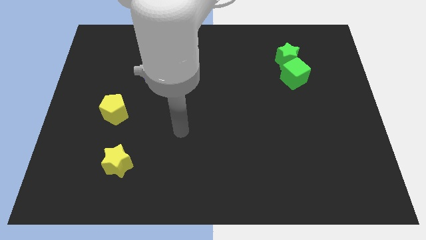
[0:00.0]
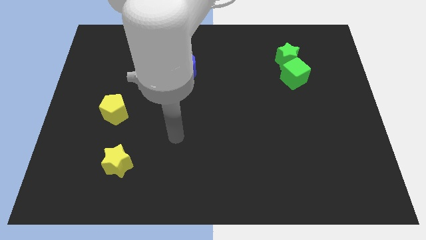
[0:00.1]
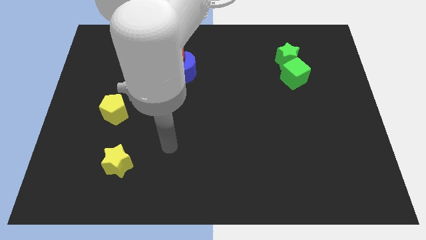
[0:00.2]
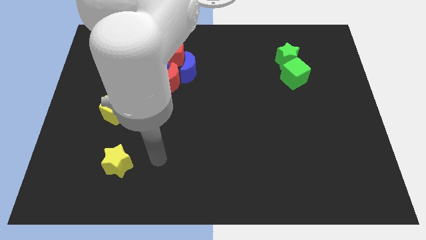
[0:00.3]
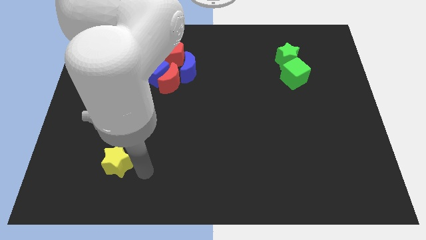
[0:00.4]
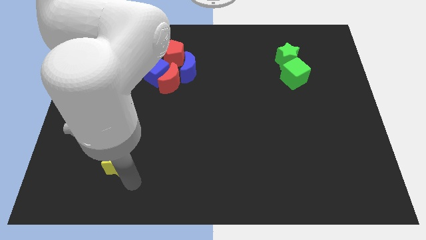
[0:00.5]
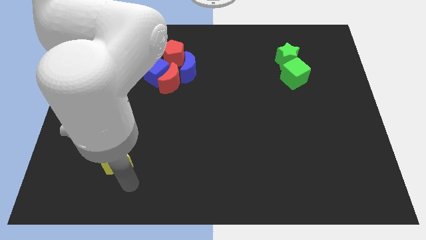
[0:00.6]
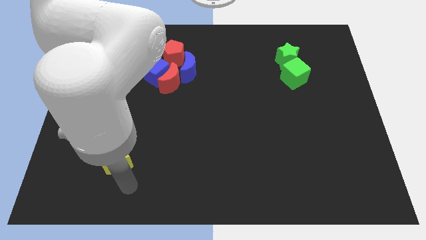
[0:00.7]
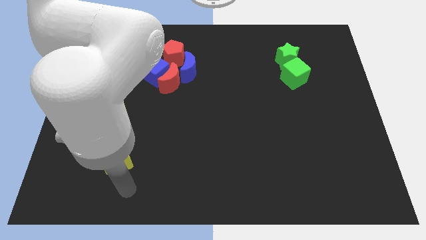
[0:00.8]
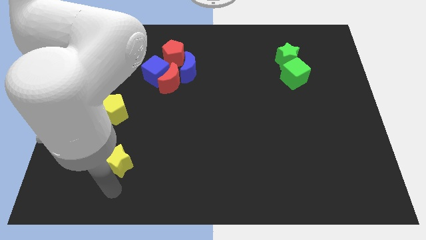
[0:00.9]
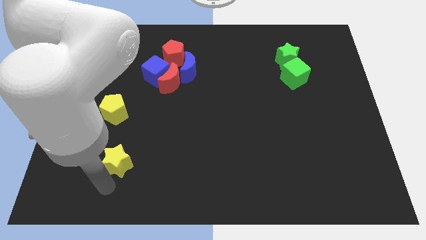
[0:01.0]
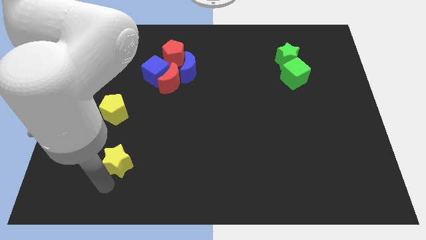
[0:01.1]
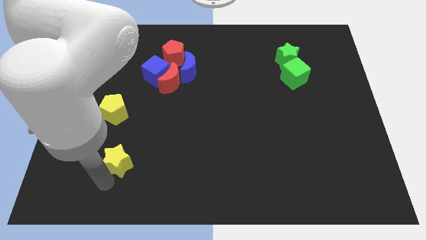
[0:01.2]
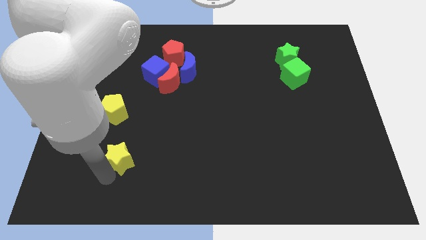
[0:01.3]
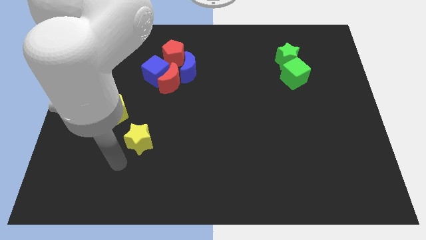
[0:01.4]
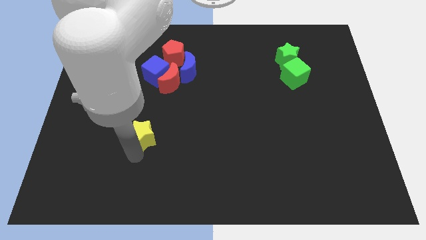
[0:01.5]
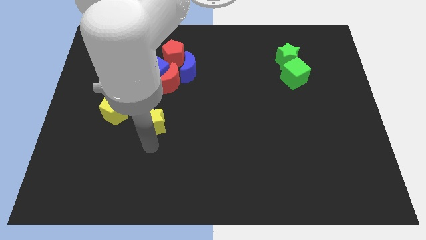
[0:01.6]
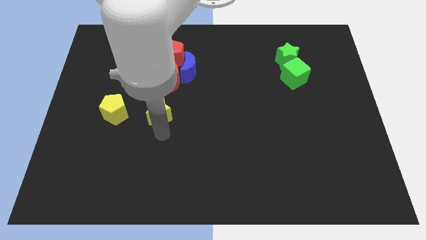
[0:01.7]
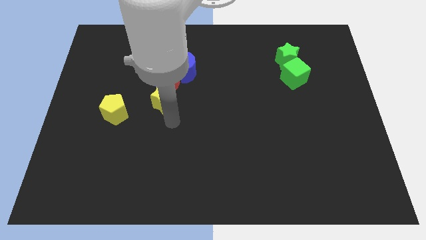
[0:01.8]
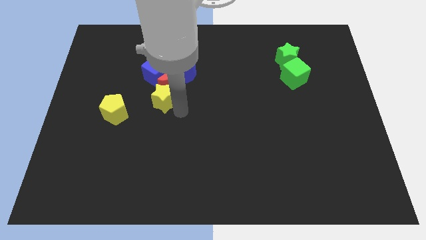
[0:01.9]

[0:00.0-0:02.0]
push the yellow star below the red moon

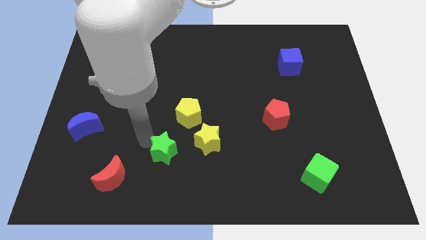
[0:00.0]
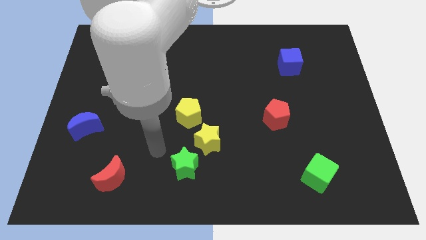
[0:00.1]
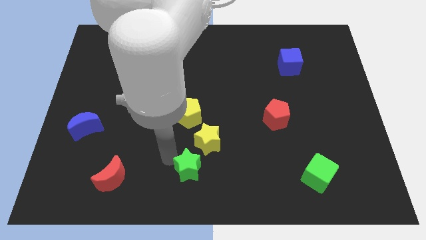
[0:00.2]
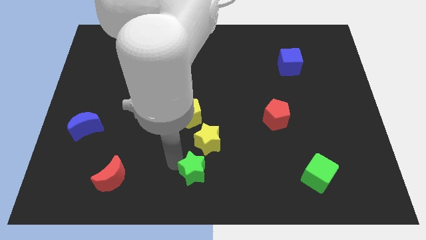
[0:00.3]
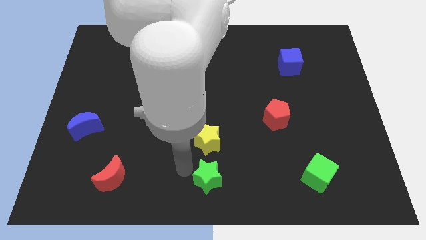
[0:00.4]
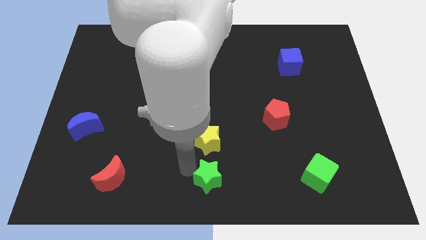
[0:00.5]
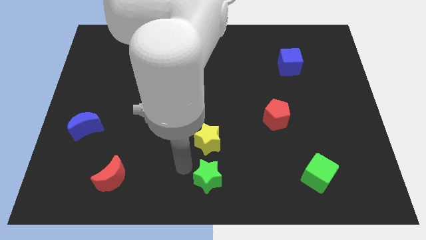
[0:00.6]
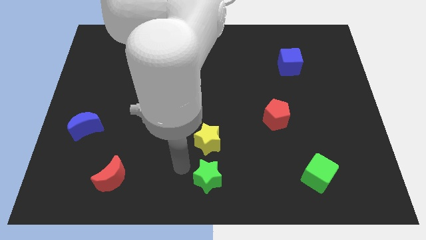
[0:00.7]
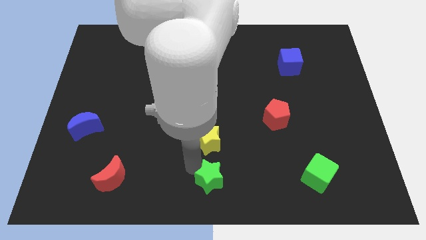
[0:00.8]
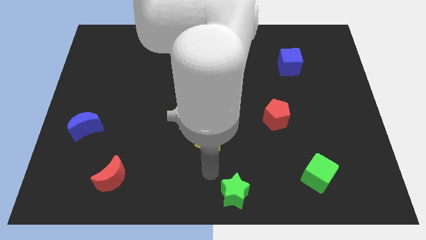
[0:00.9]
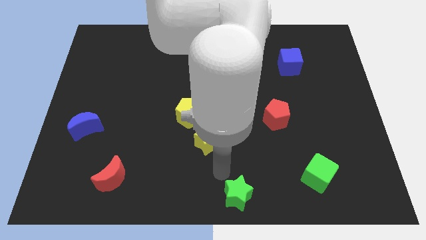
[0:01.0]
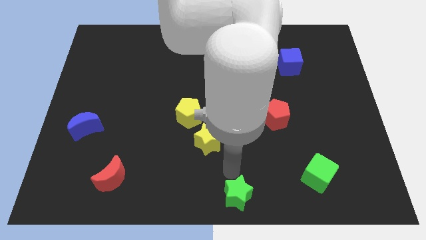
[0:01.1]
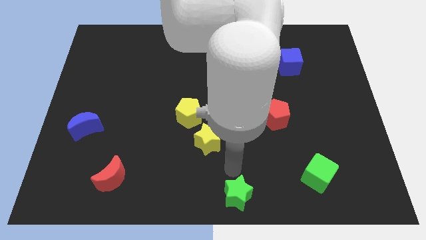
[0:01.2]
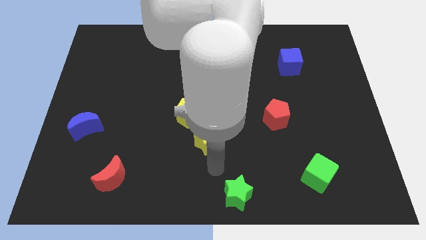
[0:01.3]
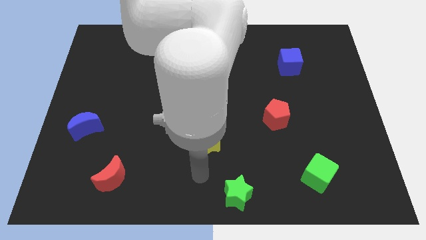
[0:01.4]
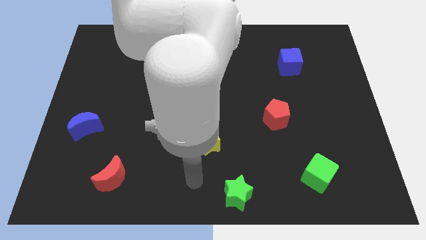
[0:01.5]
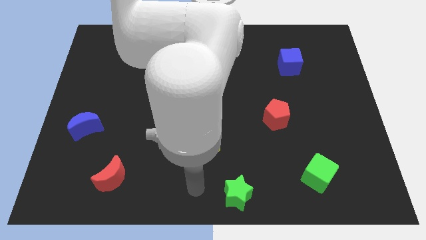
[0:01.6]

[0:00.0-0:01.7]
slide the green star towards bottom center of the board

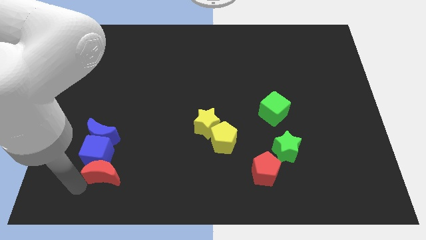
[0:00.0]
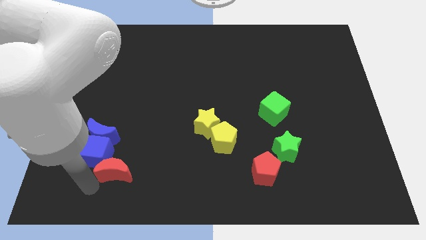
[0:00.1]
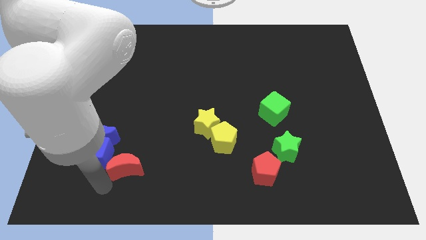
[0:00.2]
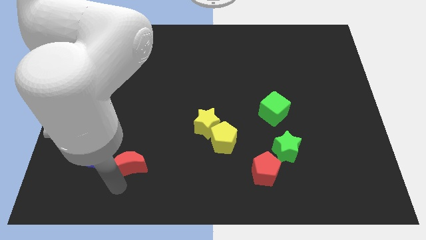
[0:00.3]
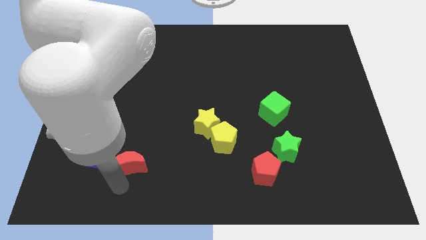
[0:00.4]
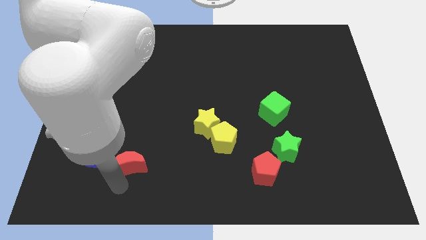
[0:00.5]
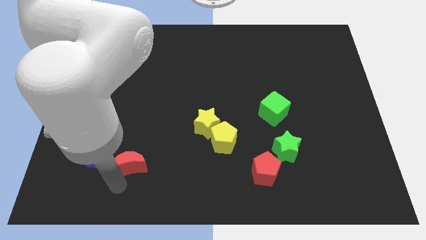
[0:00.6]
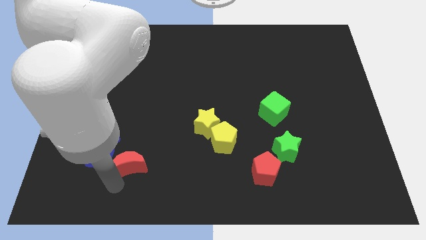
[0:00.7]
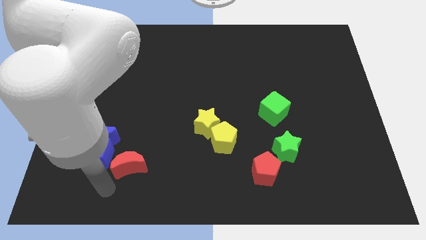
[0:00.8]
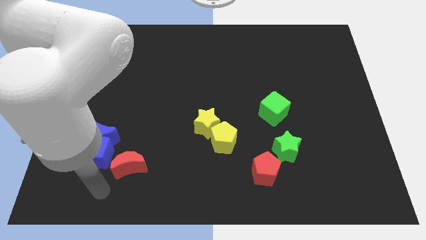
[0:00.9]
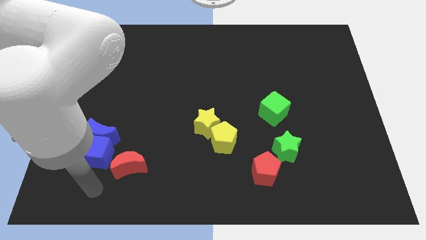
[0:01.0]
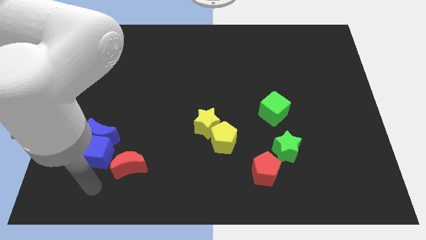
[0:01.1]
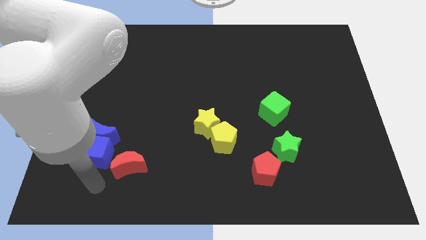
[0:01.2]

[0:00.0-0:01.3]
move the red crescent to the right of the blue cube

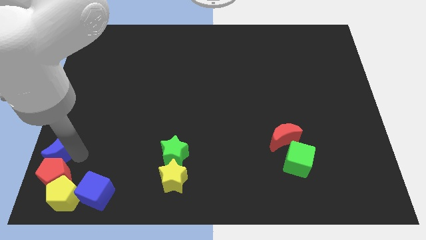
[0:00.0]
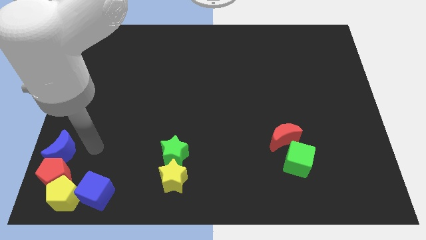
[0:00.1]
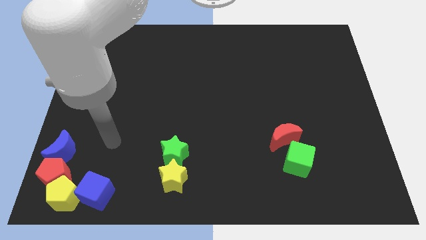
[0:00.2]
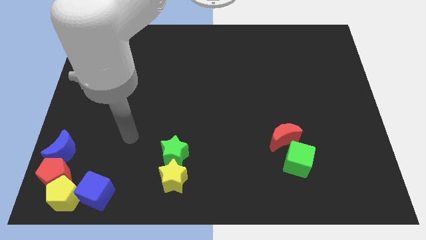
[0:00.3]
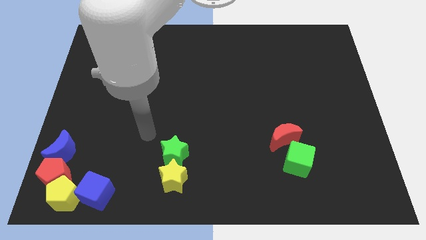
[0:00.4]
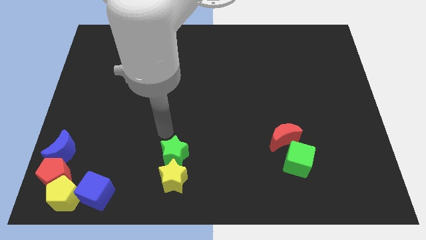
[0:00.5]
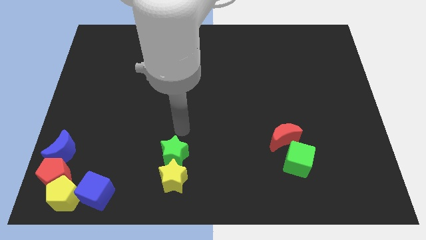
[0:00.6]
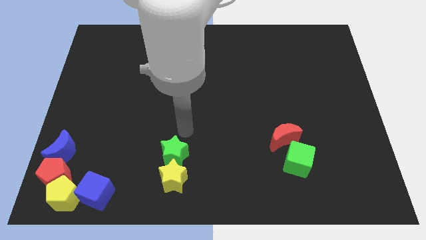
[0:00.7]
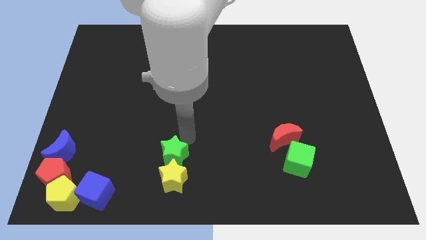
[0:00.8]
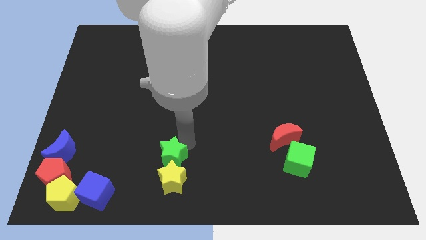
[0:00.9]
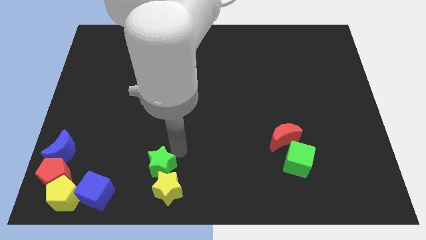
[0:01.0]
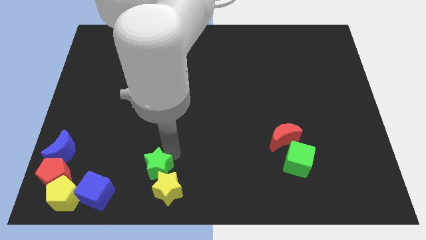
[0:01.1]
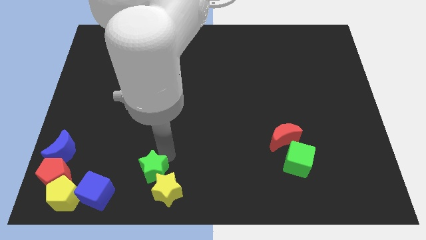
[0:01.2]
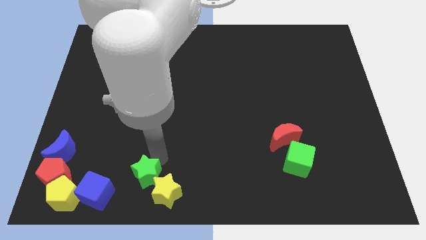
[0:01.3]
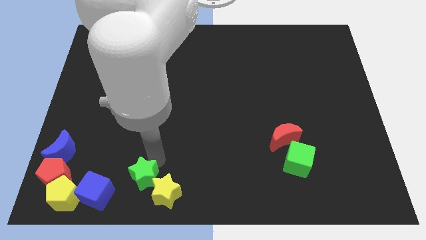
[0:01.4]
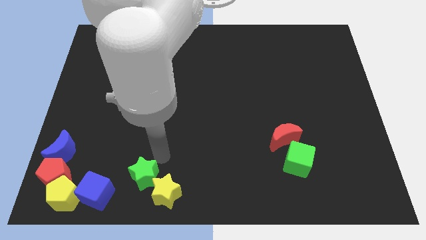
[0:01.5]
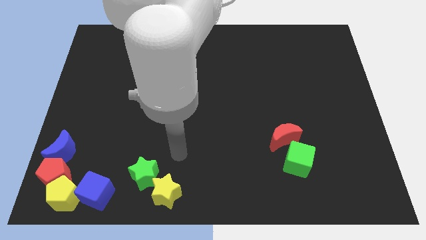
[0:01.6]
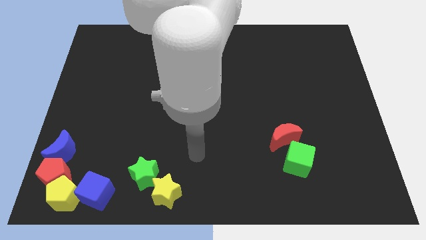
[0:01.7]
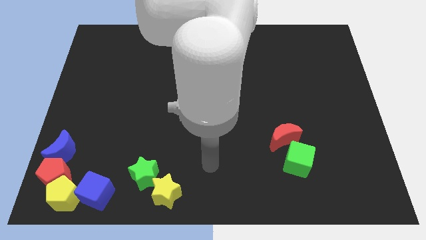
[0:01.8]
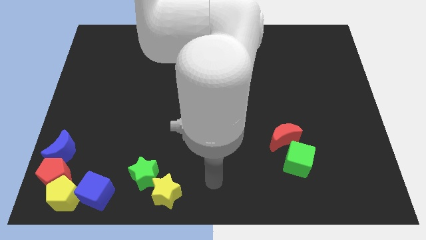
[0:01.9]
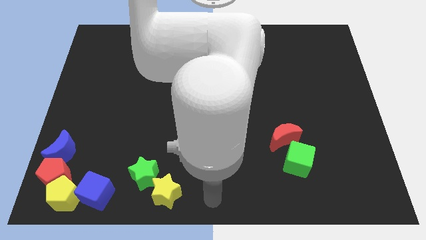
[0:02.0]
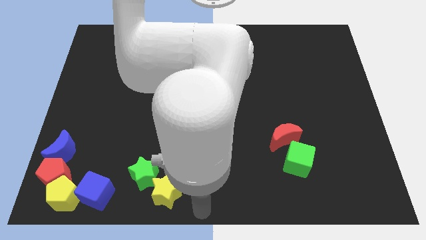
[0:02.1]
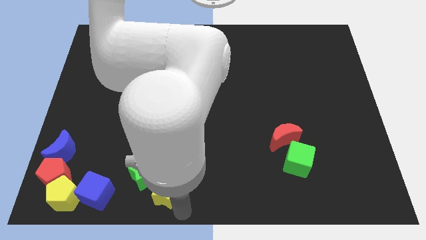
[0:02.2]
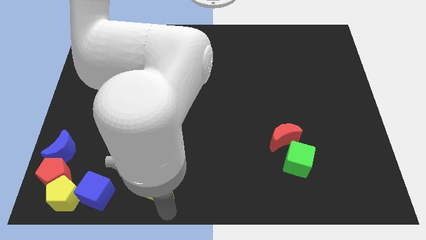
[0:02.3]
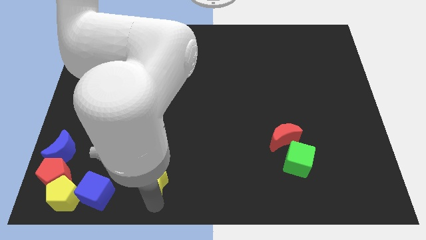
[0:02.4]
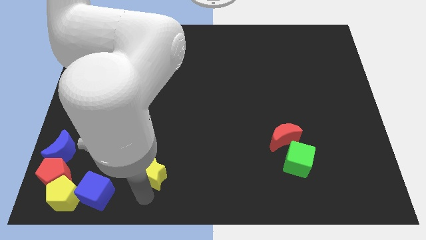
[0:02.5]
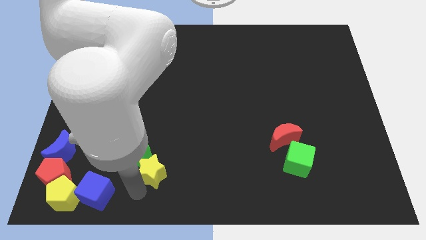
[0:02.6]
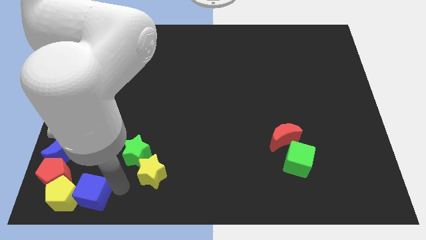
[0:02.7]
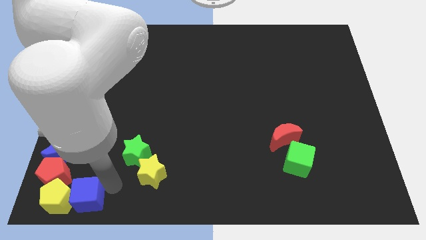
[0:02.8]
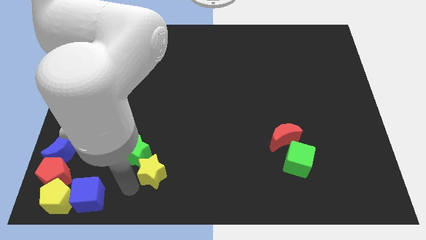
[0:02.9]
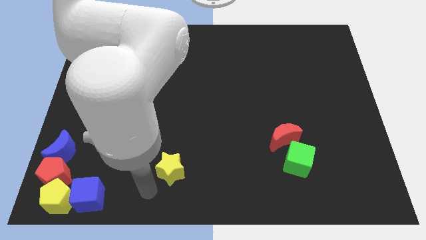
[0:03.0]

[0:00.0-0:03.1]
separate yellow and green stars

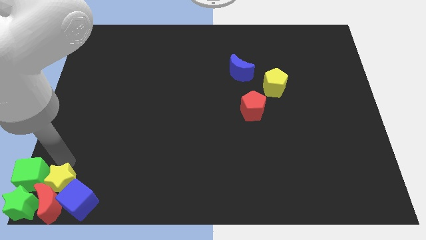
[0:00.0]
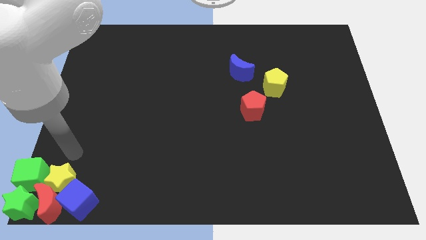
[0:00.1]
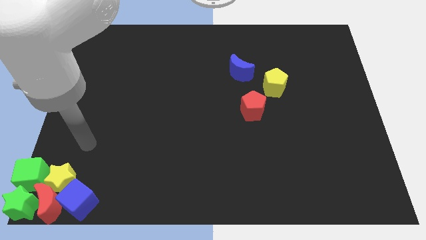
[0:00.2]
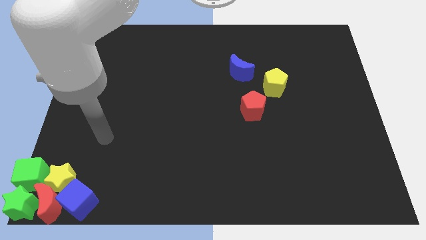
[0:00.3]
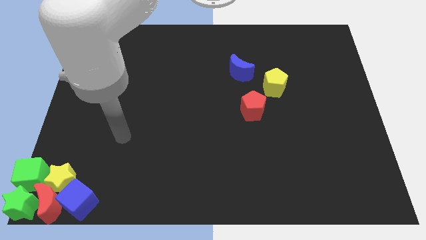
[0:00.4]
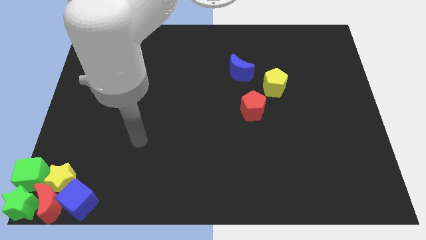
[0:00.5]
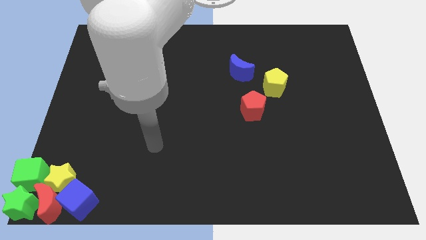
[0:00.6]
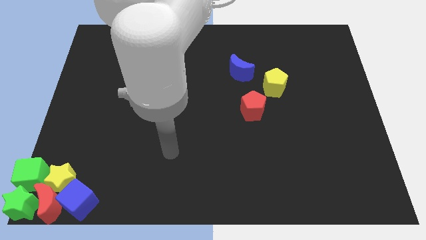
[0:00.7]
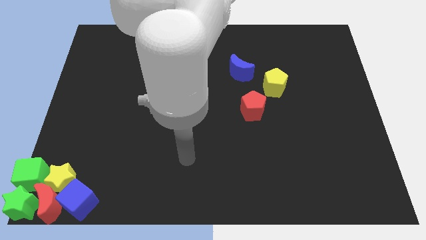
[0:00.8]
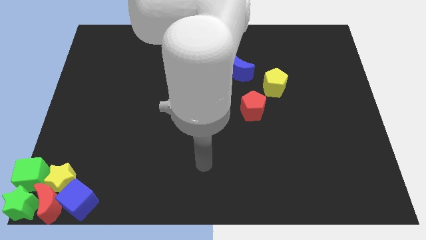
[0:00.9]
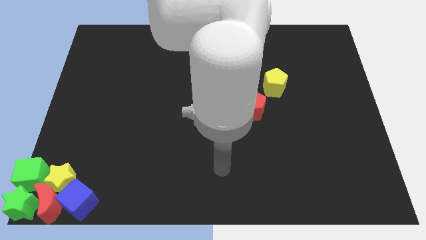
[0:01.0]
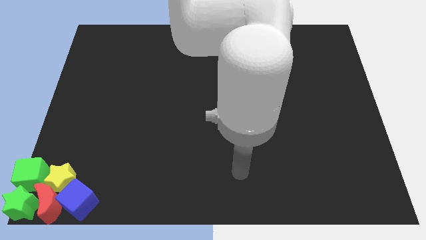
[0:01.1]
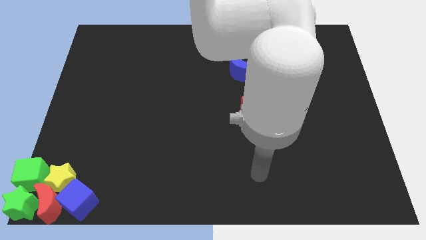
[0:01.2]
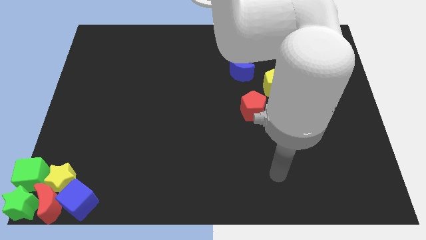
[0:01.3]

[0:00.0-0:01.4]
move the arm away from the yellow star
